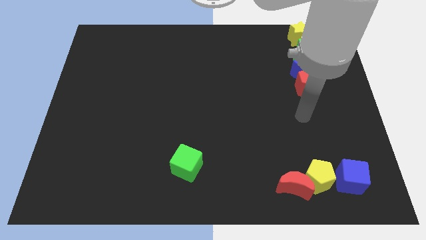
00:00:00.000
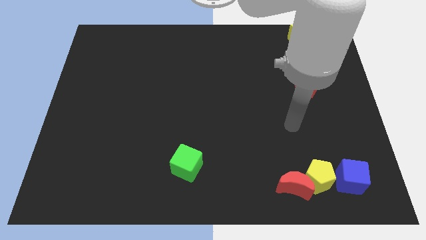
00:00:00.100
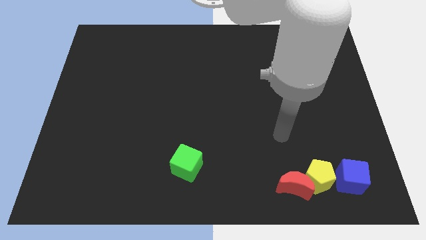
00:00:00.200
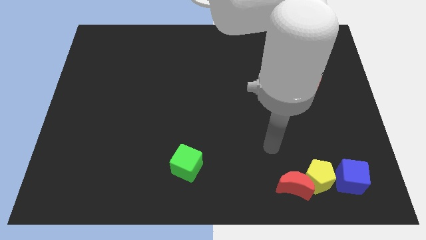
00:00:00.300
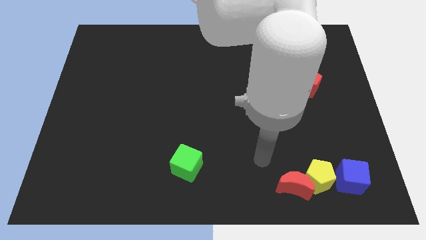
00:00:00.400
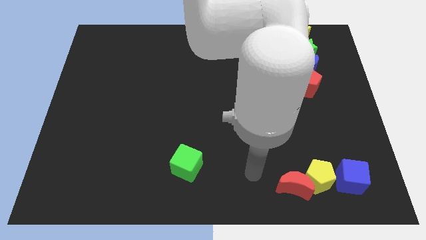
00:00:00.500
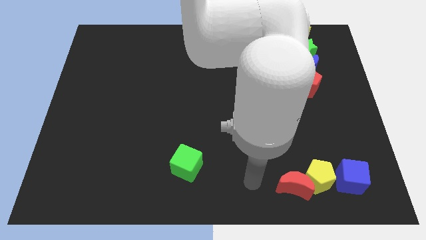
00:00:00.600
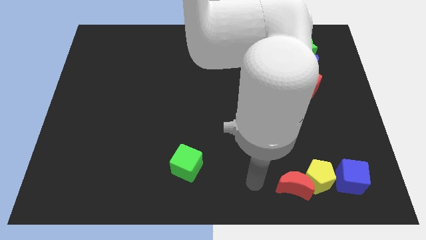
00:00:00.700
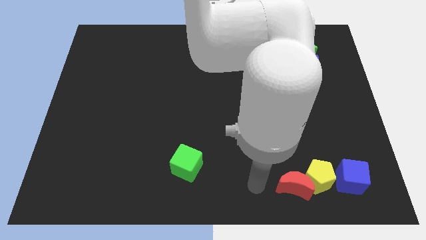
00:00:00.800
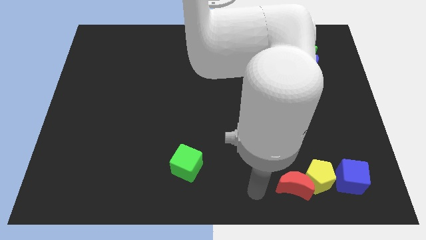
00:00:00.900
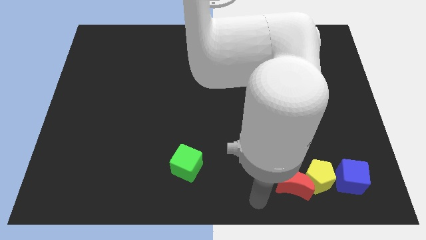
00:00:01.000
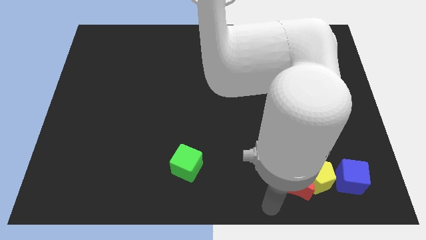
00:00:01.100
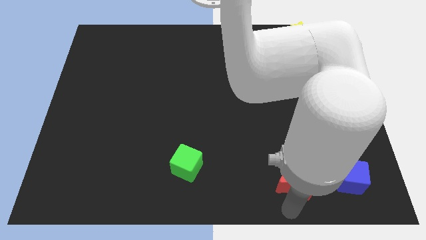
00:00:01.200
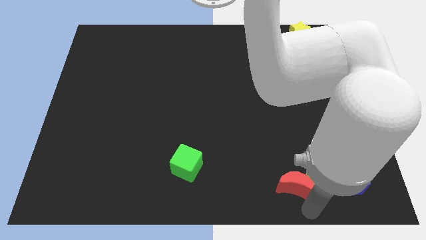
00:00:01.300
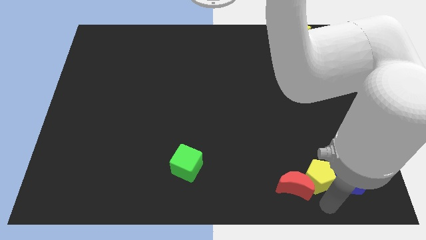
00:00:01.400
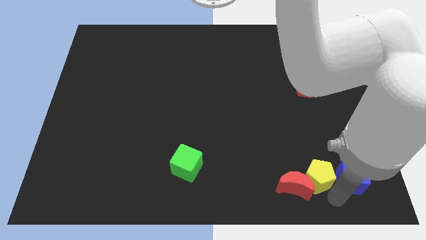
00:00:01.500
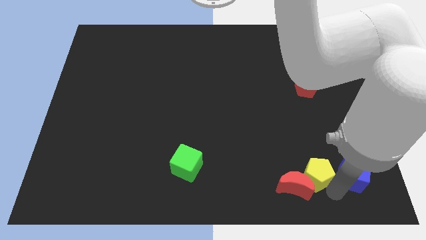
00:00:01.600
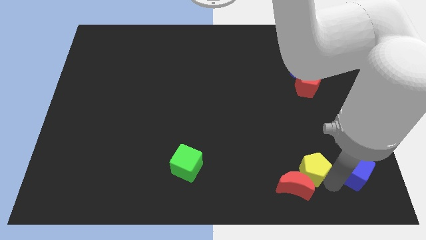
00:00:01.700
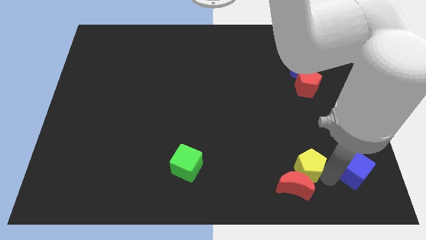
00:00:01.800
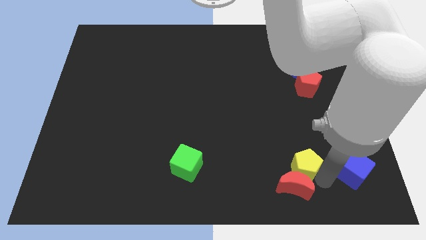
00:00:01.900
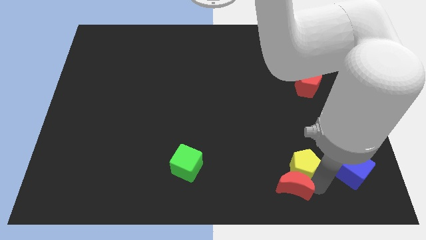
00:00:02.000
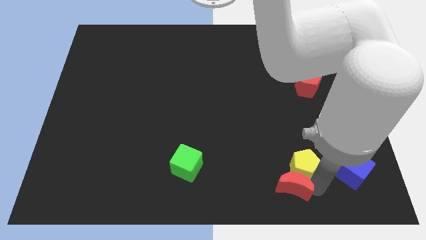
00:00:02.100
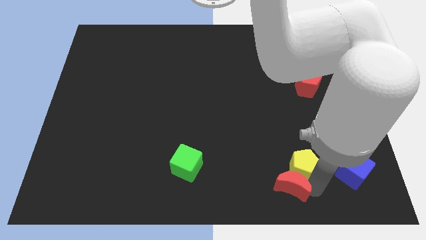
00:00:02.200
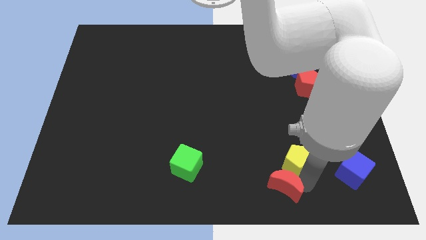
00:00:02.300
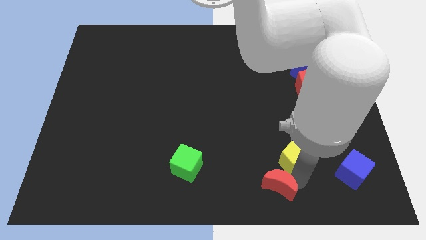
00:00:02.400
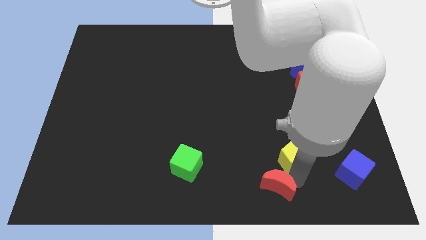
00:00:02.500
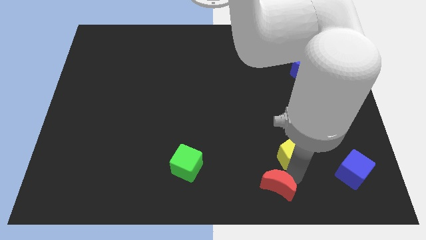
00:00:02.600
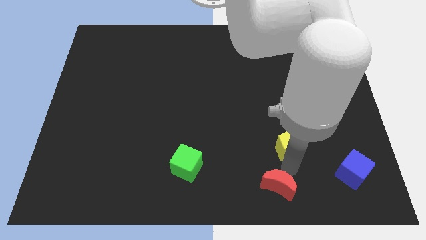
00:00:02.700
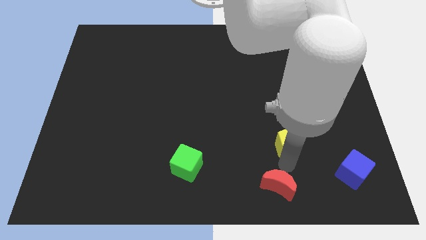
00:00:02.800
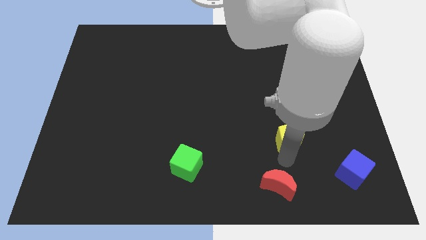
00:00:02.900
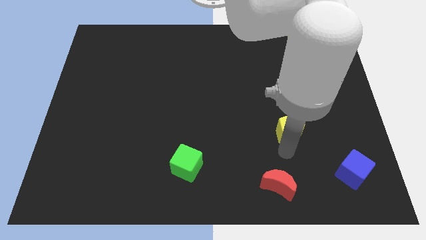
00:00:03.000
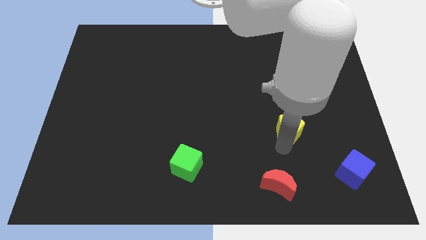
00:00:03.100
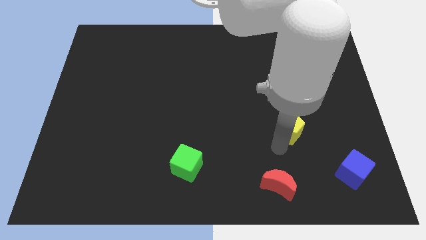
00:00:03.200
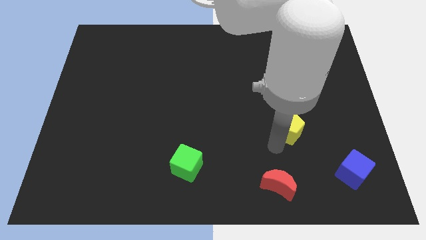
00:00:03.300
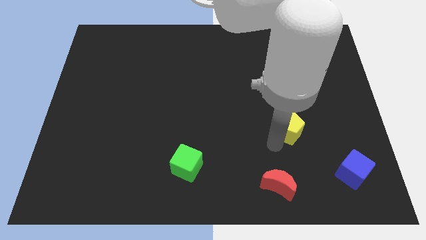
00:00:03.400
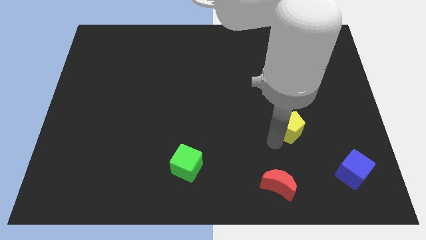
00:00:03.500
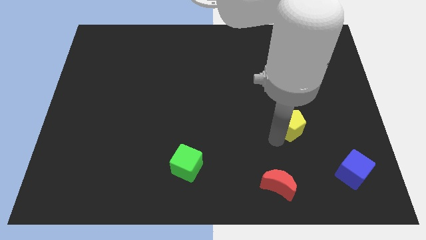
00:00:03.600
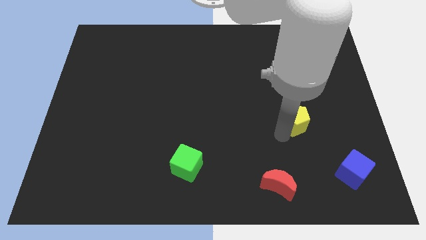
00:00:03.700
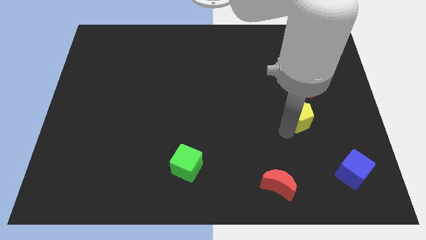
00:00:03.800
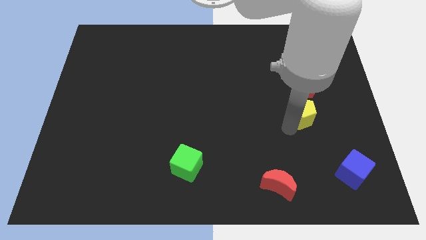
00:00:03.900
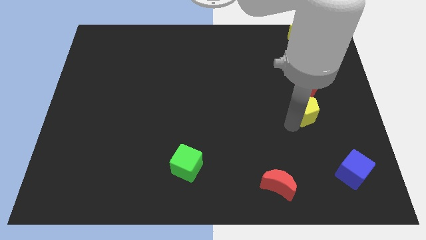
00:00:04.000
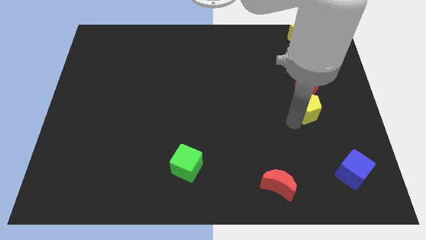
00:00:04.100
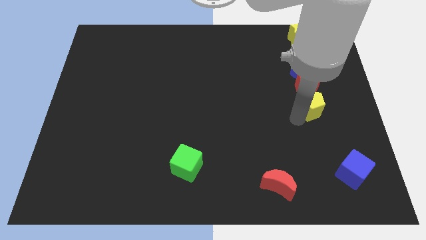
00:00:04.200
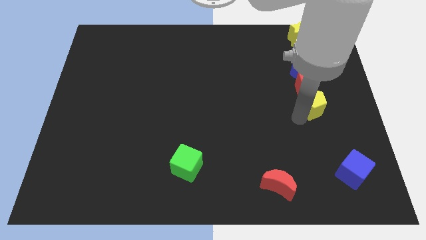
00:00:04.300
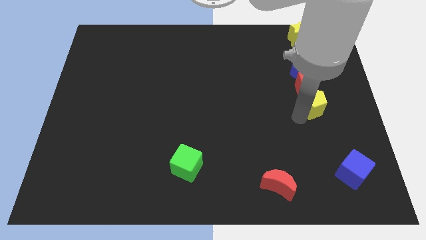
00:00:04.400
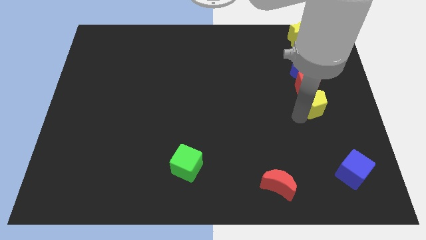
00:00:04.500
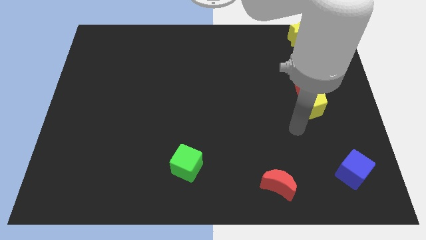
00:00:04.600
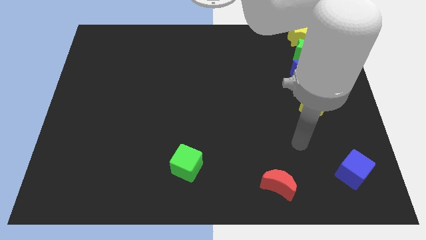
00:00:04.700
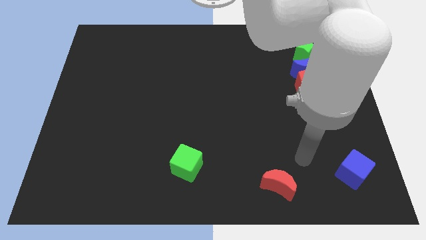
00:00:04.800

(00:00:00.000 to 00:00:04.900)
place the yellow pentagon below the red pentagon

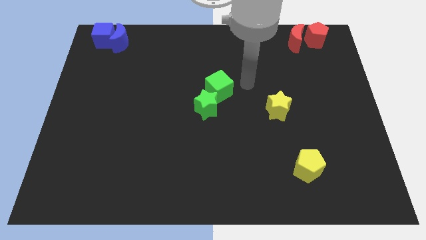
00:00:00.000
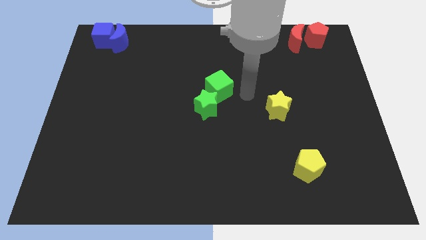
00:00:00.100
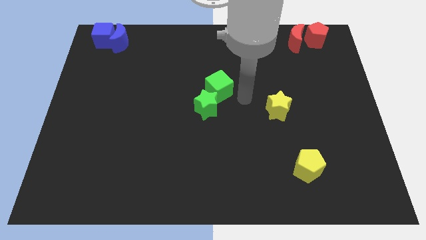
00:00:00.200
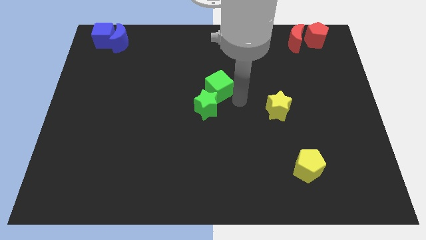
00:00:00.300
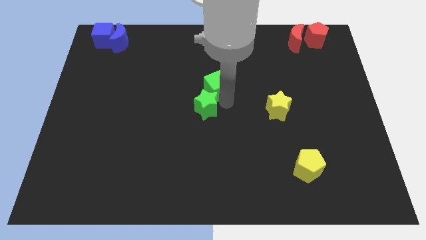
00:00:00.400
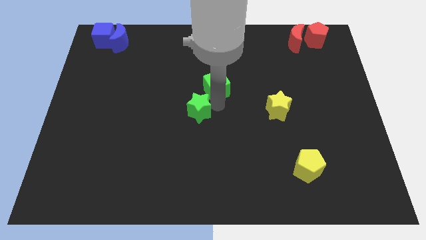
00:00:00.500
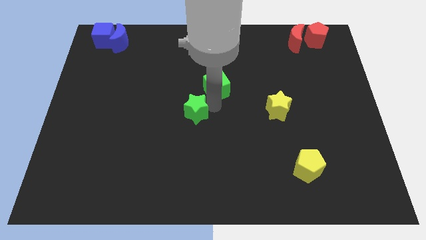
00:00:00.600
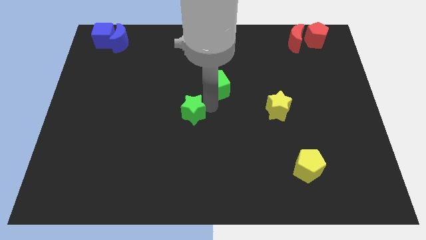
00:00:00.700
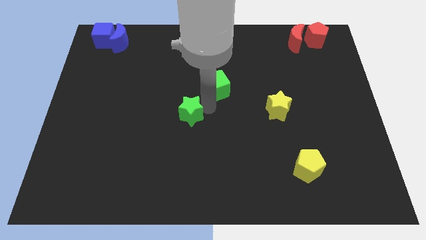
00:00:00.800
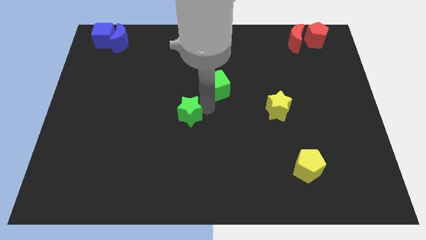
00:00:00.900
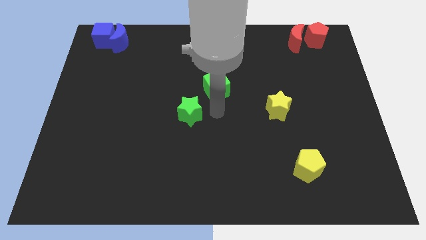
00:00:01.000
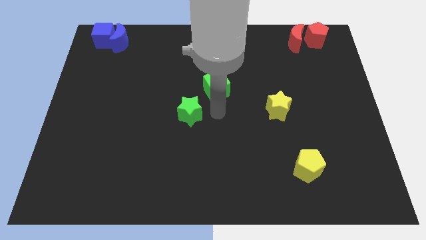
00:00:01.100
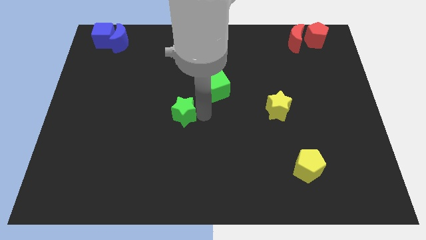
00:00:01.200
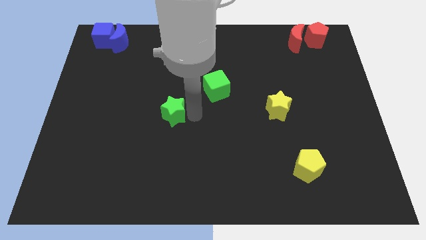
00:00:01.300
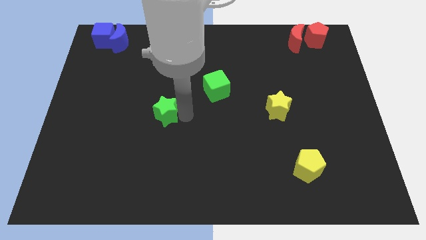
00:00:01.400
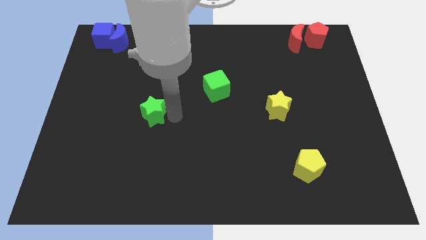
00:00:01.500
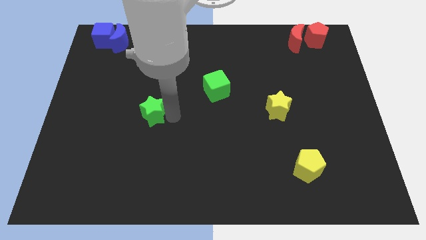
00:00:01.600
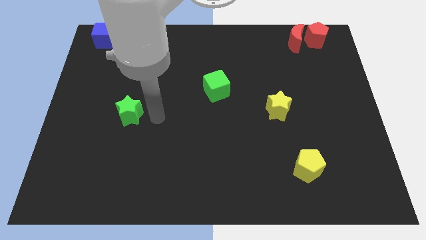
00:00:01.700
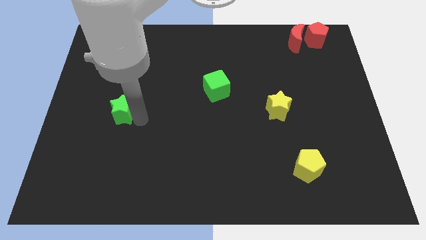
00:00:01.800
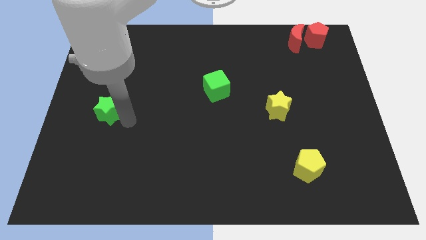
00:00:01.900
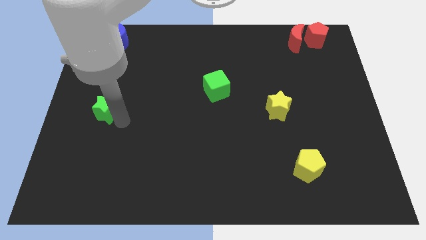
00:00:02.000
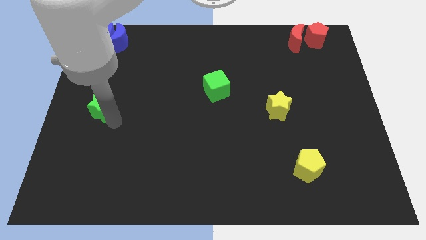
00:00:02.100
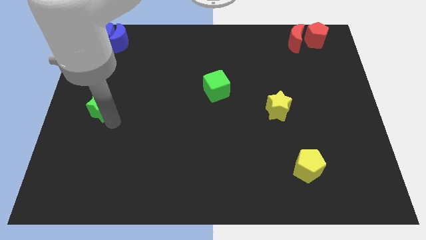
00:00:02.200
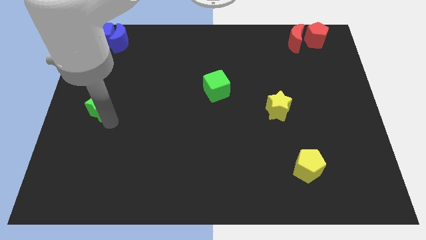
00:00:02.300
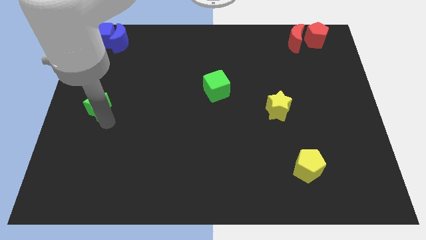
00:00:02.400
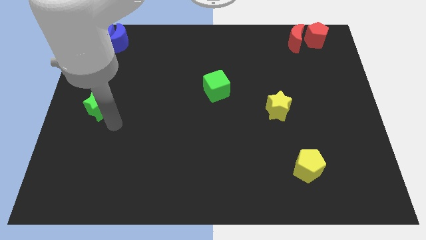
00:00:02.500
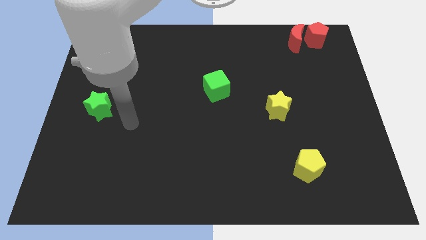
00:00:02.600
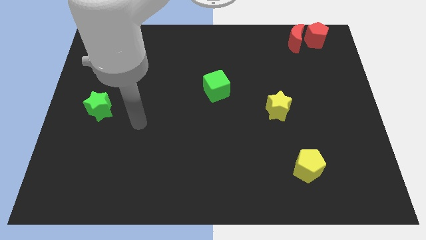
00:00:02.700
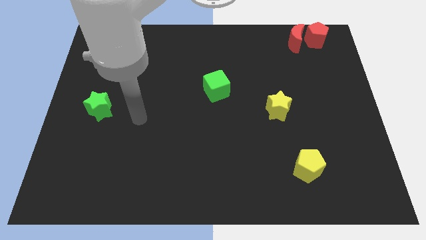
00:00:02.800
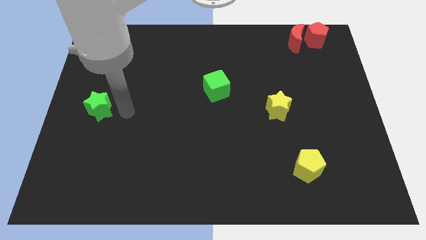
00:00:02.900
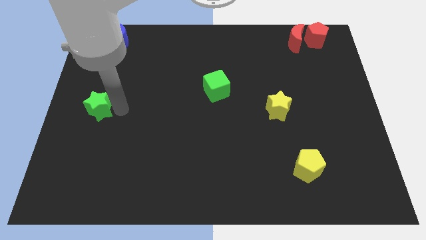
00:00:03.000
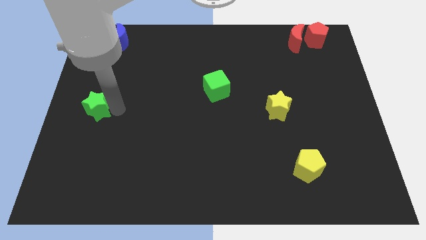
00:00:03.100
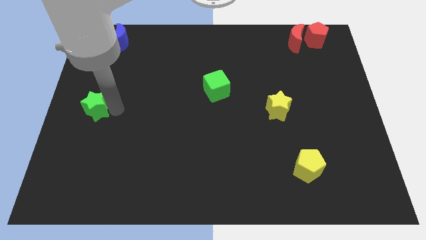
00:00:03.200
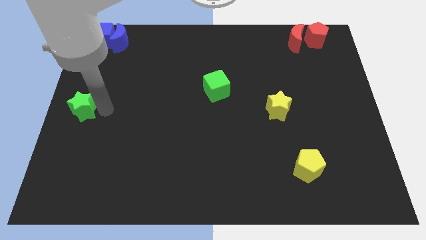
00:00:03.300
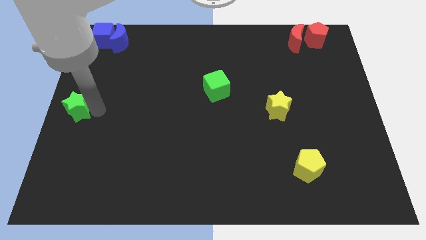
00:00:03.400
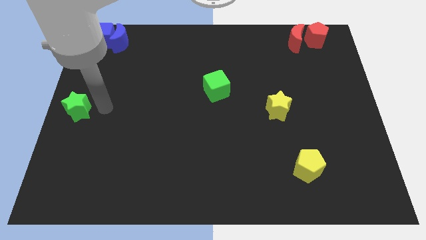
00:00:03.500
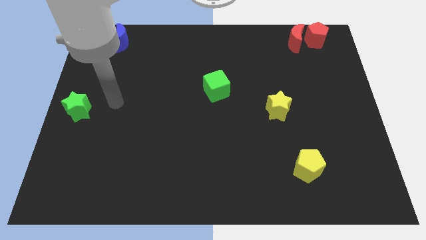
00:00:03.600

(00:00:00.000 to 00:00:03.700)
separate the green star from the green cube

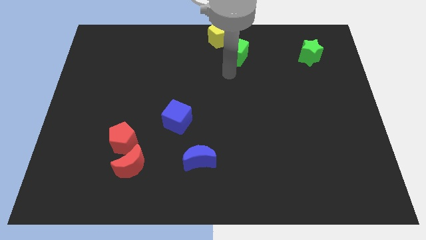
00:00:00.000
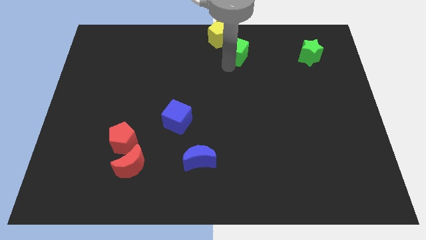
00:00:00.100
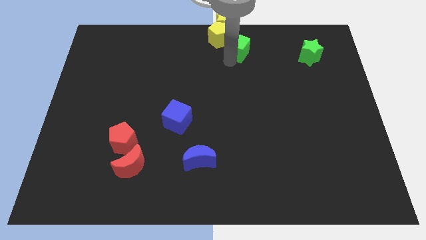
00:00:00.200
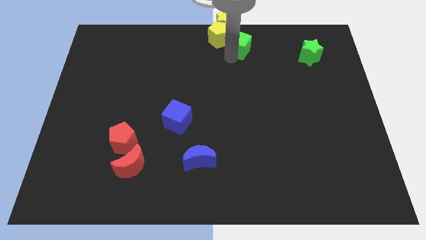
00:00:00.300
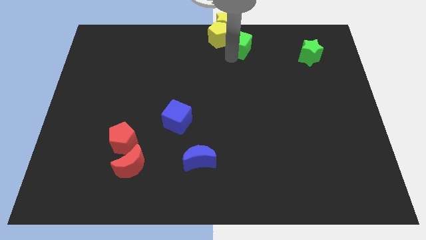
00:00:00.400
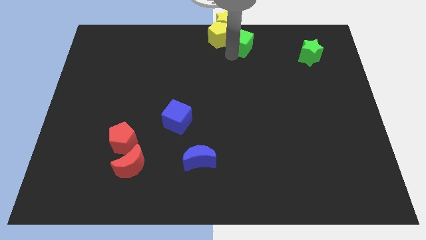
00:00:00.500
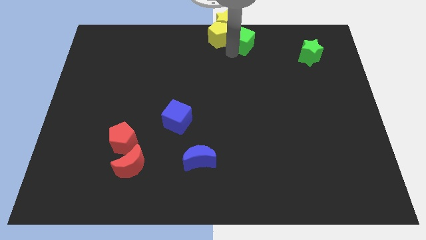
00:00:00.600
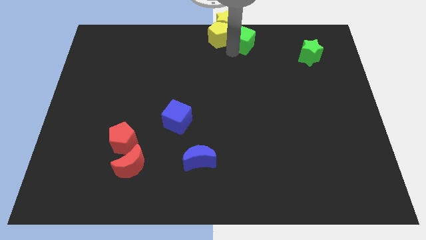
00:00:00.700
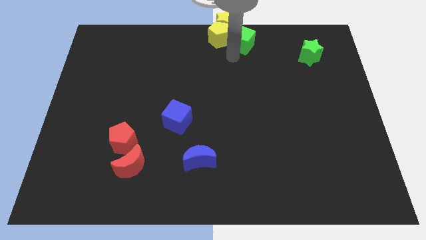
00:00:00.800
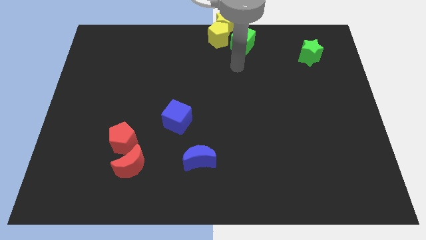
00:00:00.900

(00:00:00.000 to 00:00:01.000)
move the green cube to the right of the yellow pentagon
